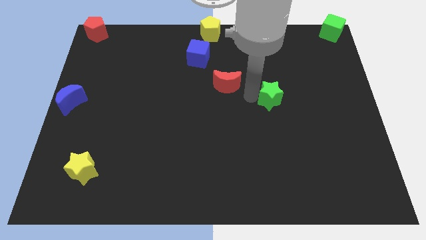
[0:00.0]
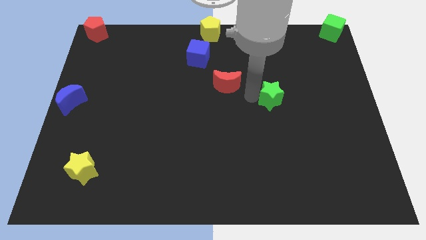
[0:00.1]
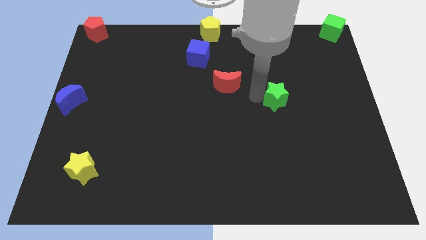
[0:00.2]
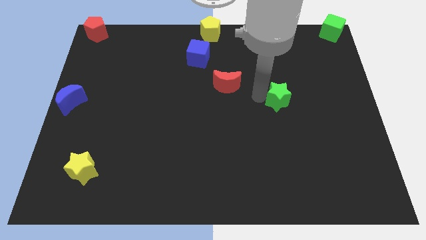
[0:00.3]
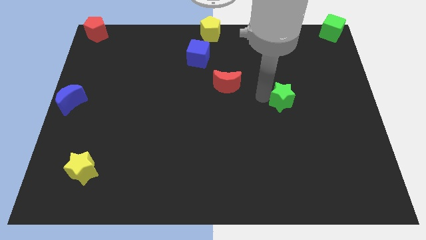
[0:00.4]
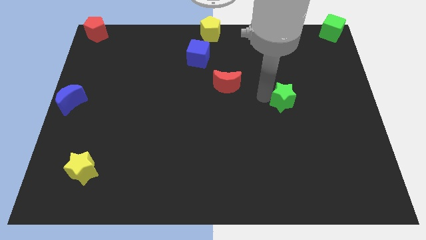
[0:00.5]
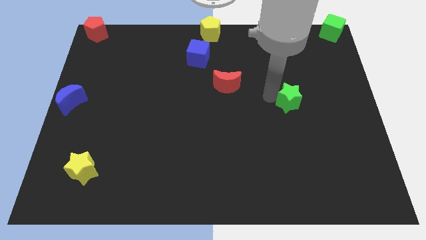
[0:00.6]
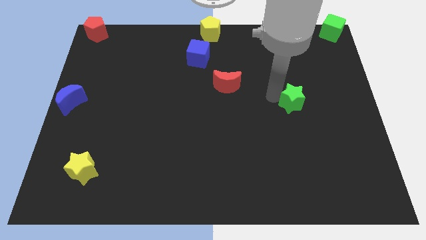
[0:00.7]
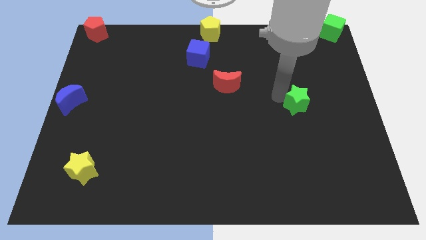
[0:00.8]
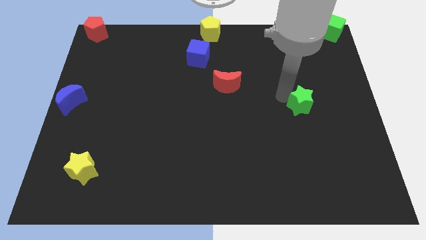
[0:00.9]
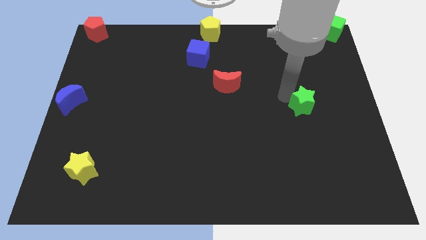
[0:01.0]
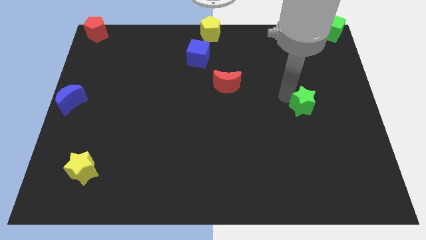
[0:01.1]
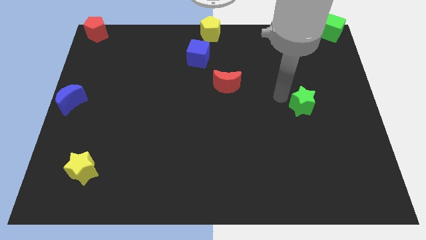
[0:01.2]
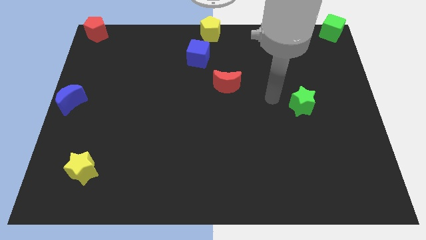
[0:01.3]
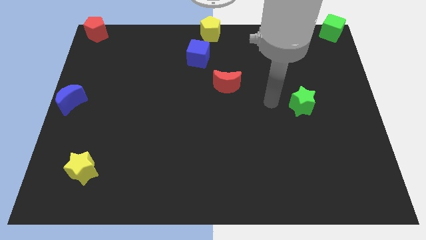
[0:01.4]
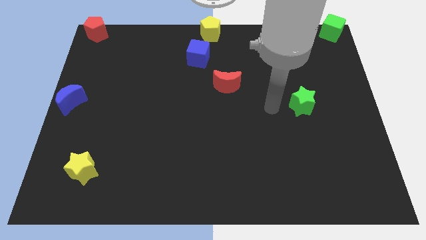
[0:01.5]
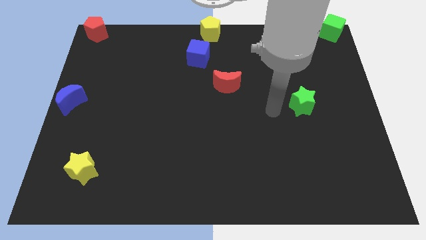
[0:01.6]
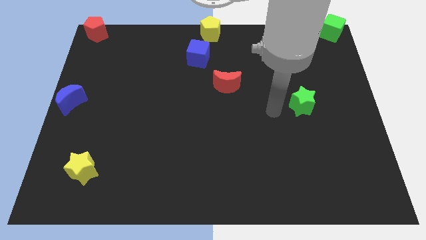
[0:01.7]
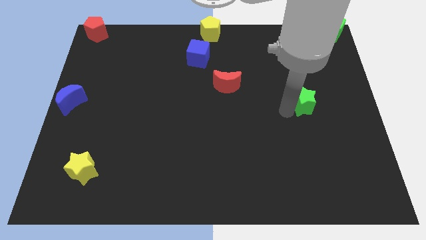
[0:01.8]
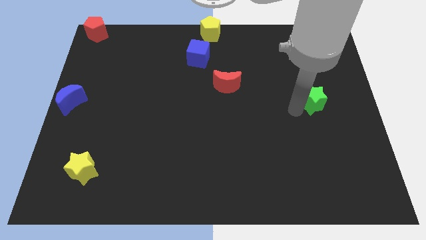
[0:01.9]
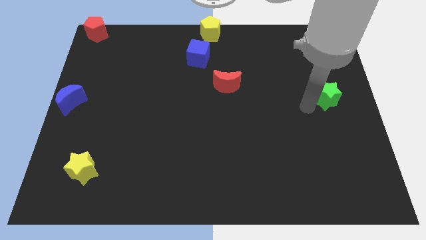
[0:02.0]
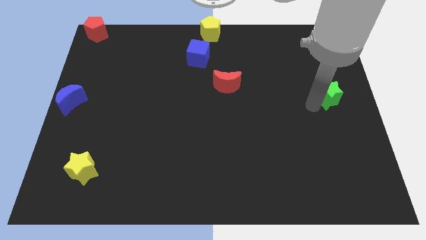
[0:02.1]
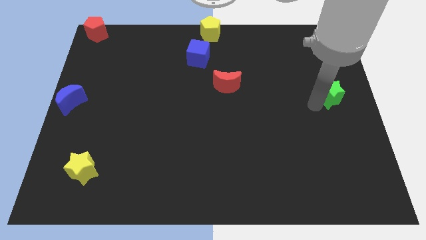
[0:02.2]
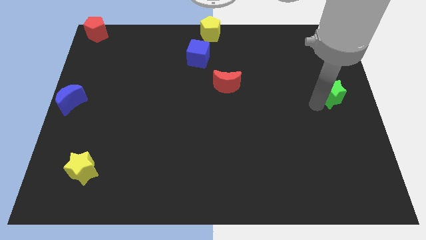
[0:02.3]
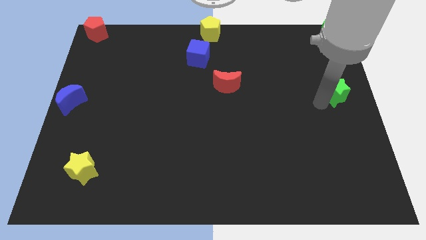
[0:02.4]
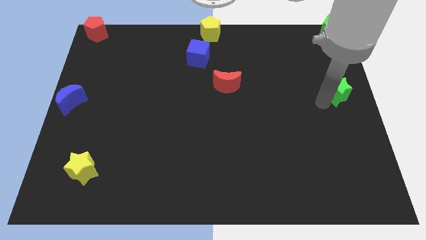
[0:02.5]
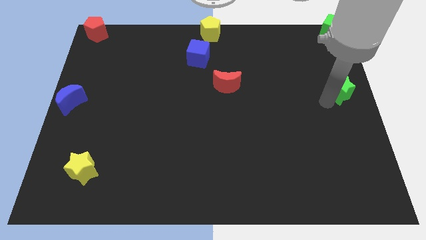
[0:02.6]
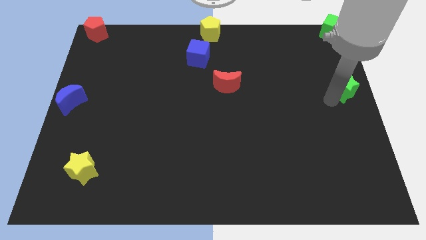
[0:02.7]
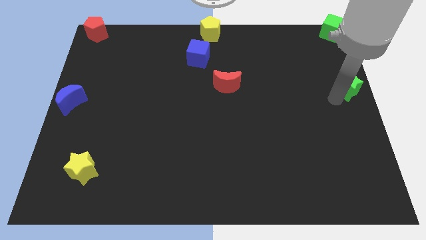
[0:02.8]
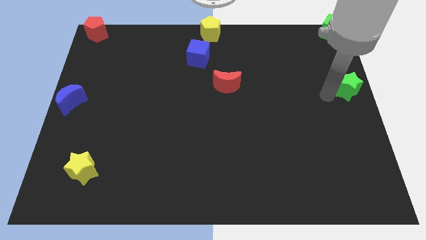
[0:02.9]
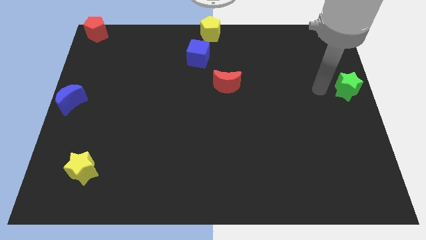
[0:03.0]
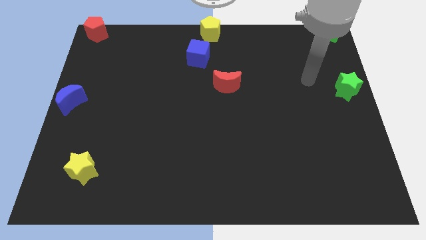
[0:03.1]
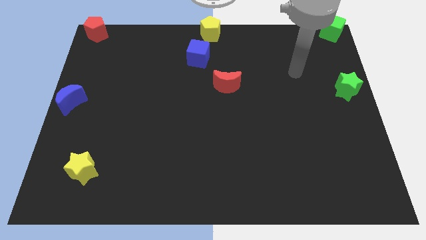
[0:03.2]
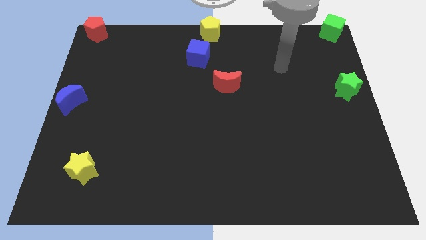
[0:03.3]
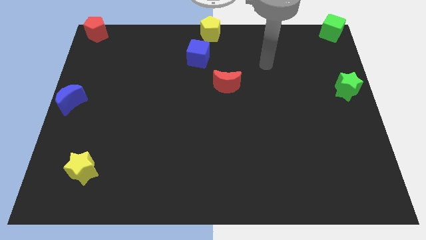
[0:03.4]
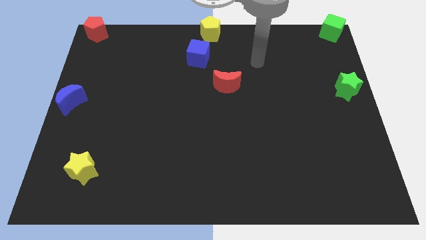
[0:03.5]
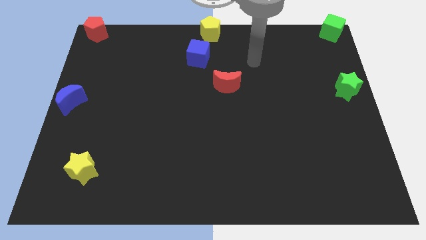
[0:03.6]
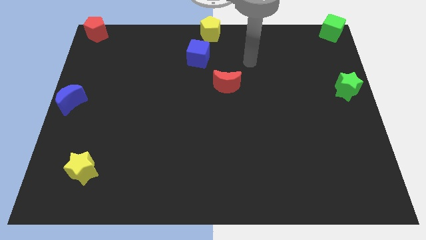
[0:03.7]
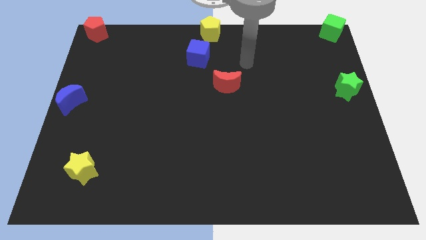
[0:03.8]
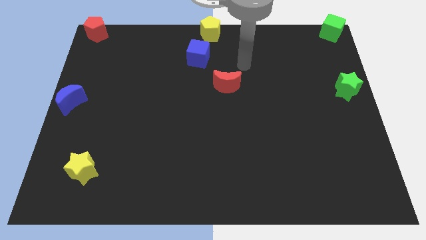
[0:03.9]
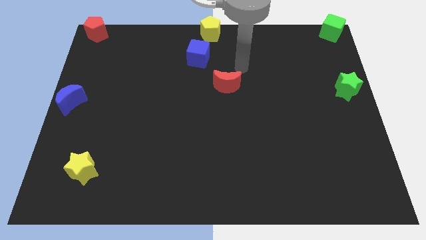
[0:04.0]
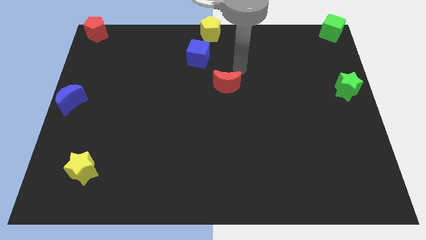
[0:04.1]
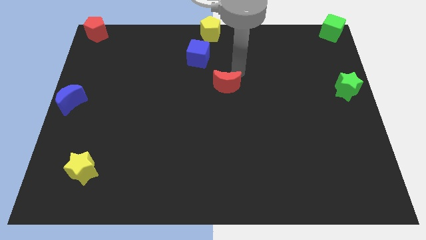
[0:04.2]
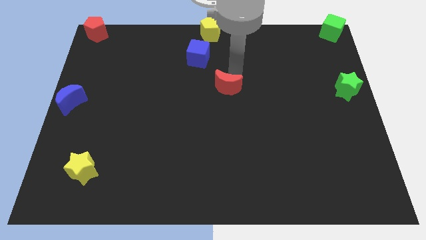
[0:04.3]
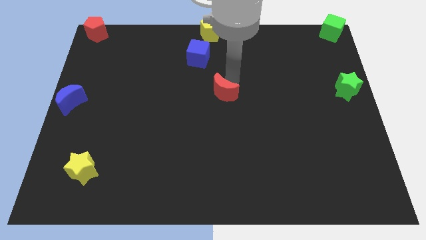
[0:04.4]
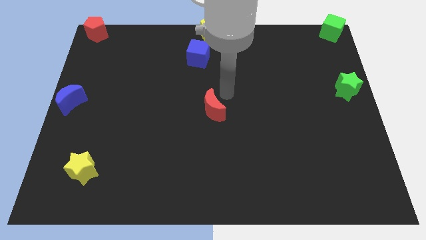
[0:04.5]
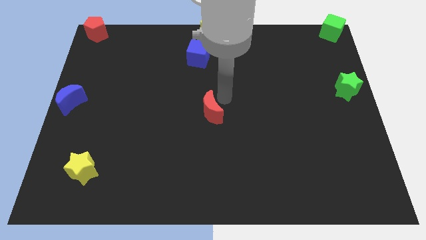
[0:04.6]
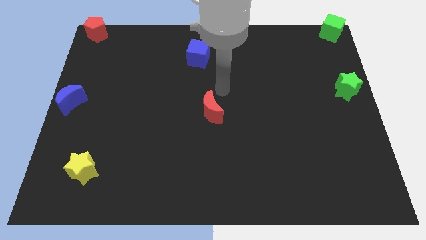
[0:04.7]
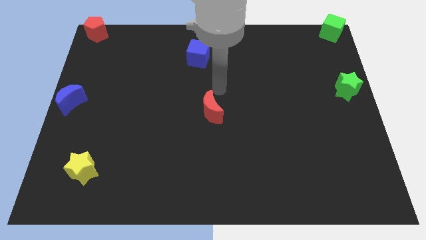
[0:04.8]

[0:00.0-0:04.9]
place the green star to the right

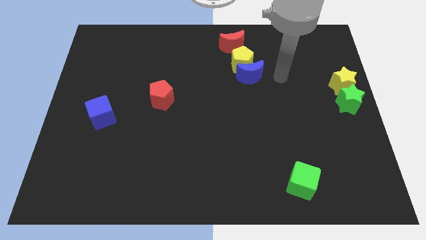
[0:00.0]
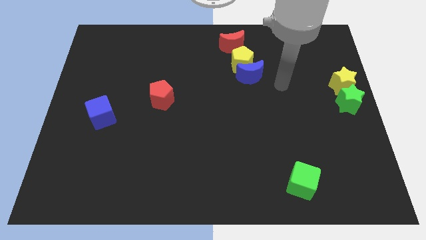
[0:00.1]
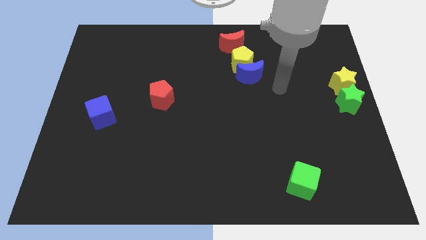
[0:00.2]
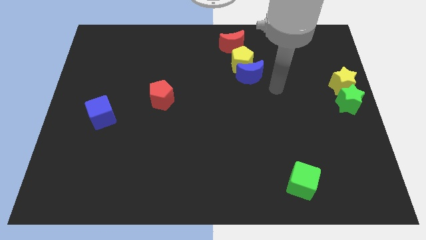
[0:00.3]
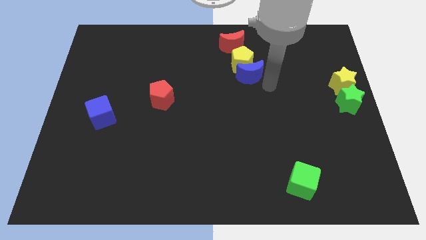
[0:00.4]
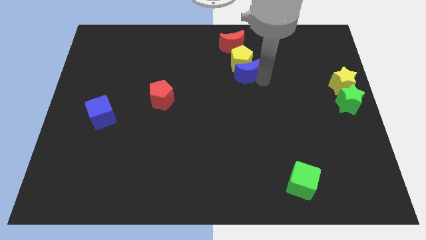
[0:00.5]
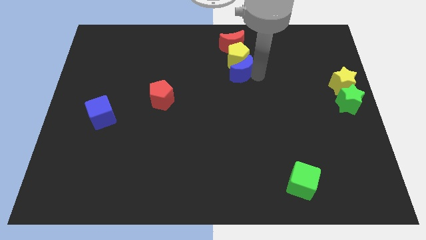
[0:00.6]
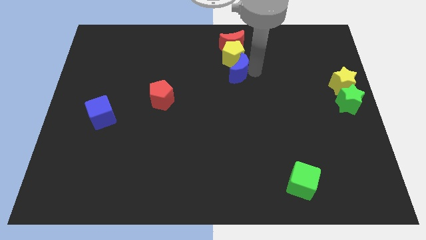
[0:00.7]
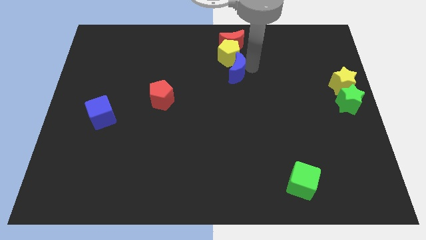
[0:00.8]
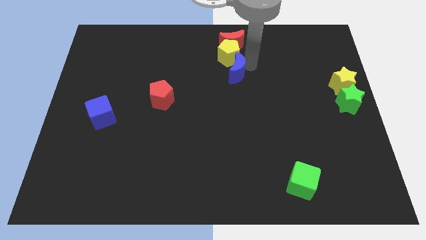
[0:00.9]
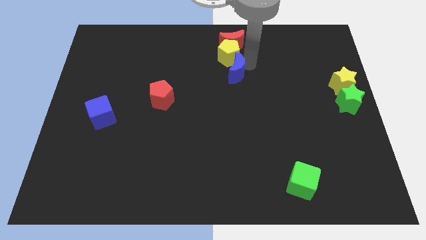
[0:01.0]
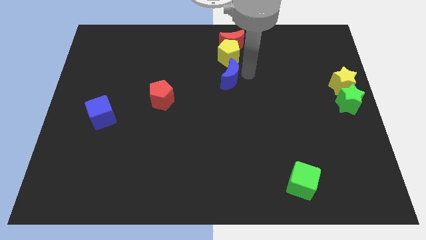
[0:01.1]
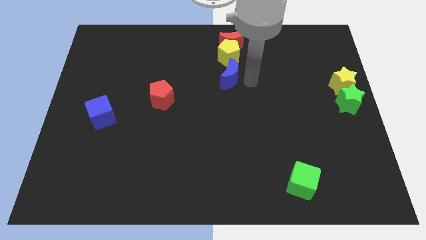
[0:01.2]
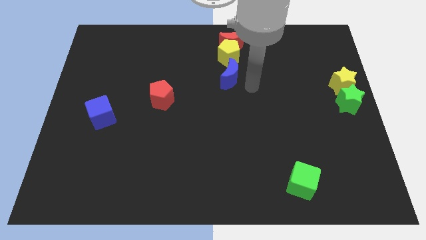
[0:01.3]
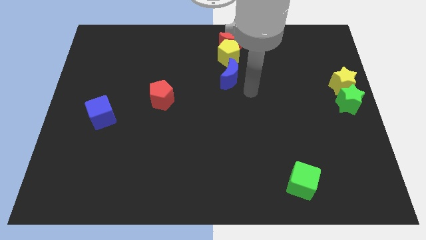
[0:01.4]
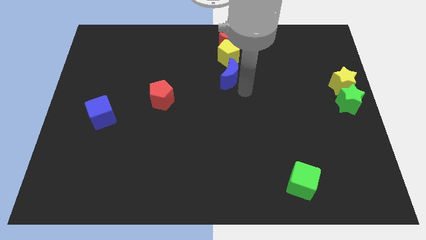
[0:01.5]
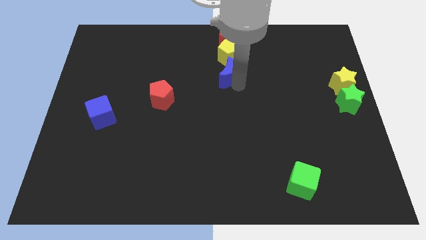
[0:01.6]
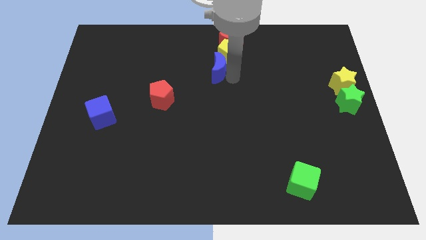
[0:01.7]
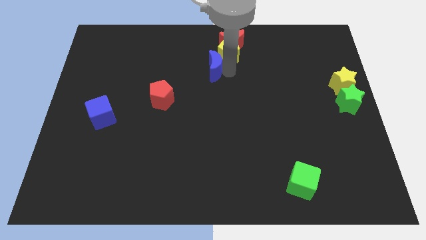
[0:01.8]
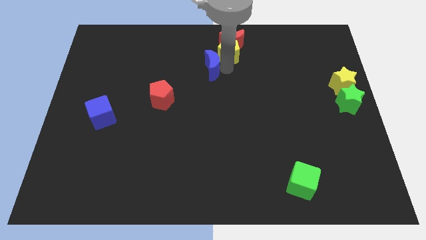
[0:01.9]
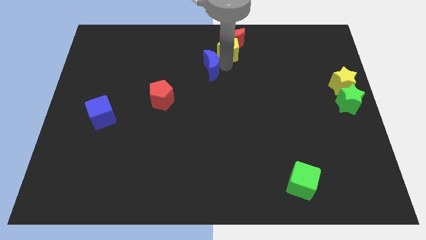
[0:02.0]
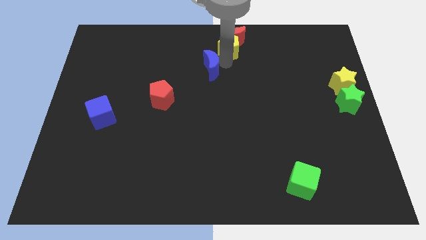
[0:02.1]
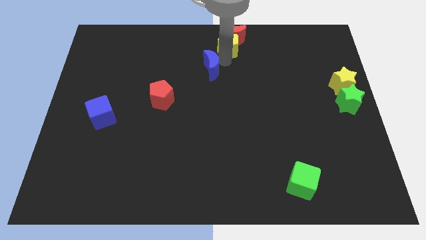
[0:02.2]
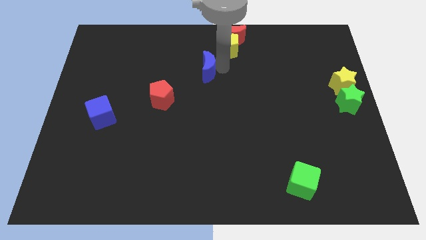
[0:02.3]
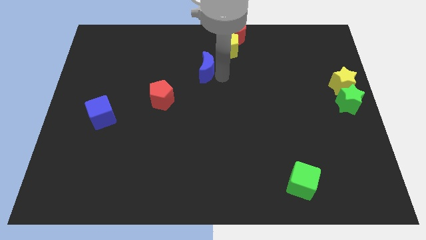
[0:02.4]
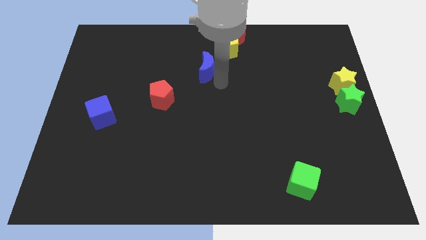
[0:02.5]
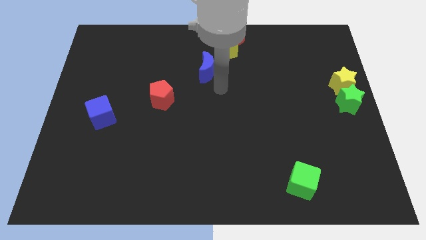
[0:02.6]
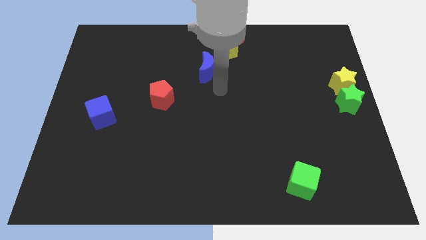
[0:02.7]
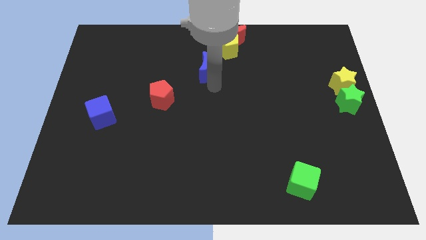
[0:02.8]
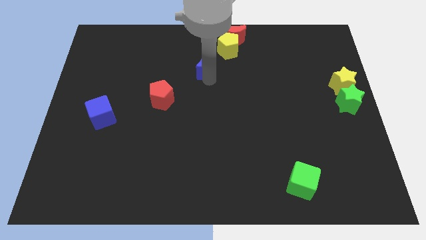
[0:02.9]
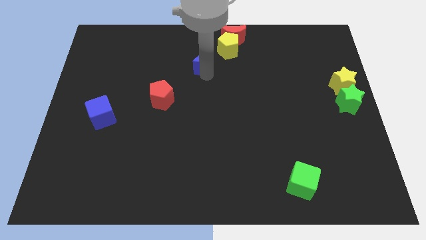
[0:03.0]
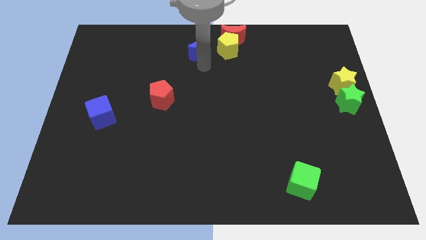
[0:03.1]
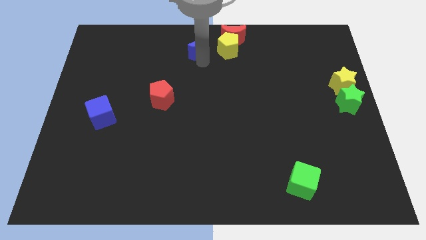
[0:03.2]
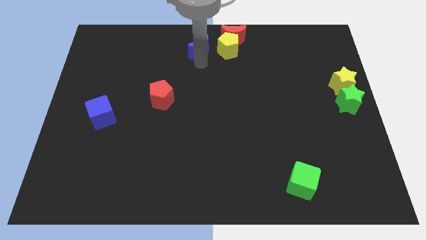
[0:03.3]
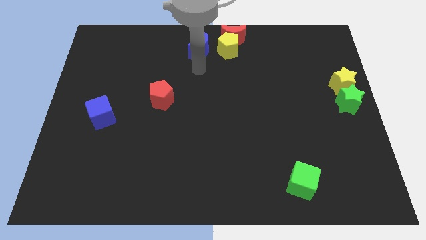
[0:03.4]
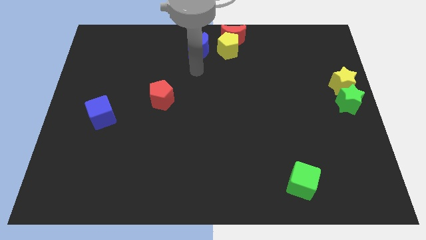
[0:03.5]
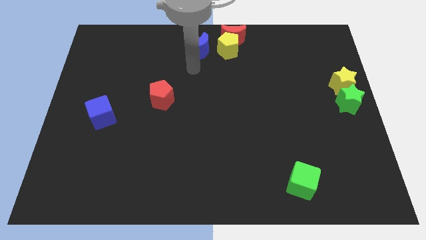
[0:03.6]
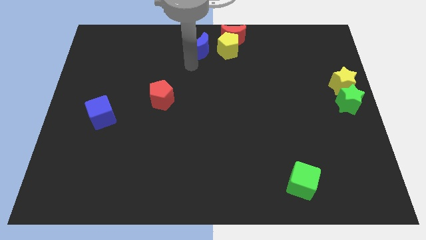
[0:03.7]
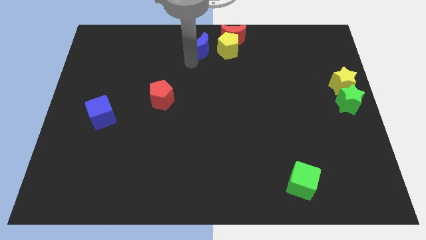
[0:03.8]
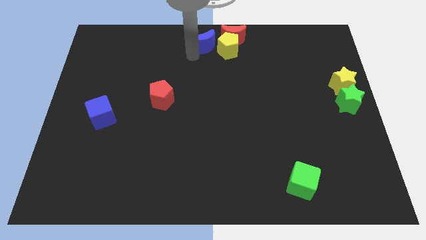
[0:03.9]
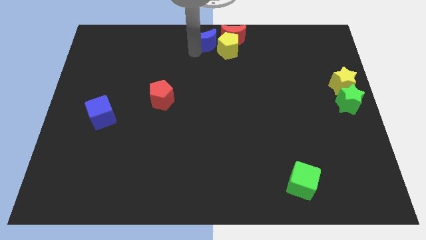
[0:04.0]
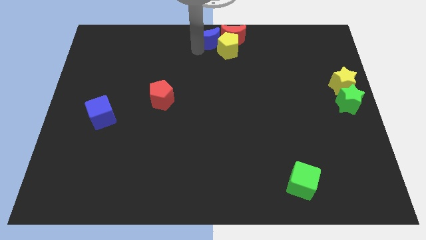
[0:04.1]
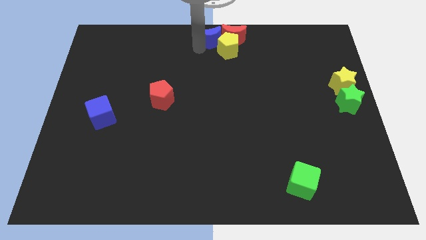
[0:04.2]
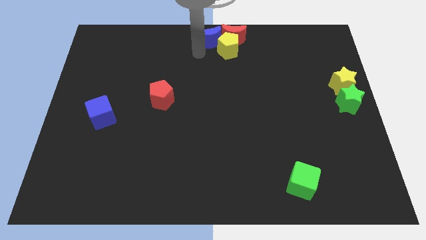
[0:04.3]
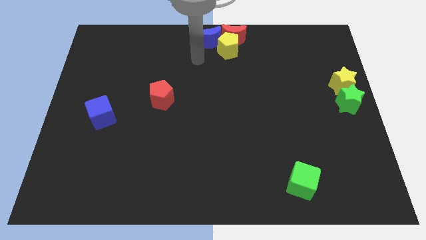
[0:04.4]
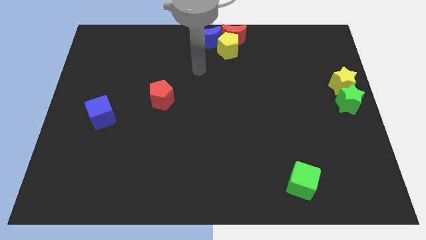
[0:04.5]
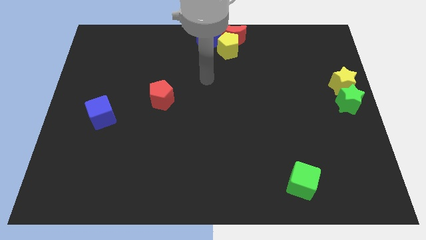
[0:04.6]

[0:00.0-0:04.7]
move the blue crescent into the red crescent
